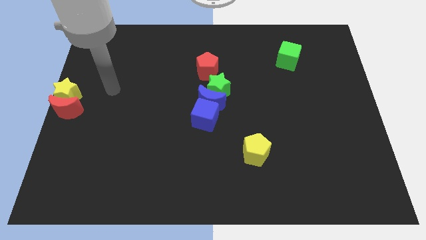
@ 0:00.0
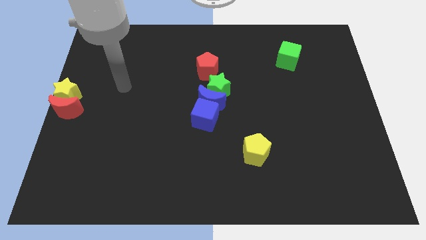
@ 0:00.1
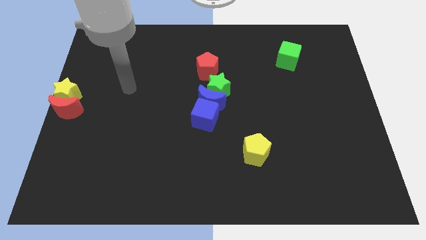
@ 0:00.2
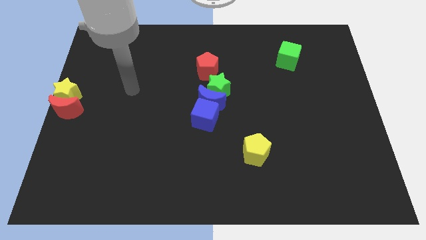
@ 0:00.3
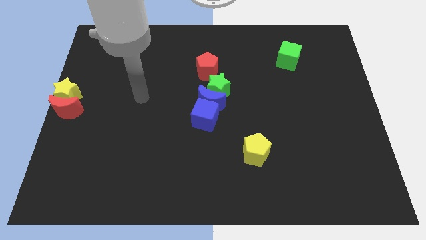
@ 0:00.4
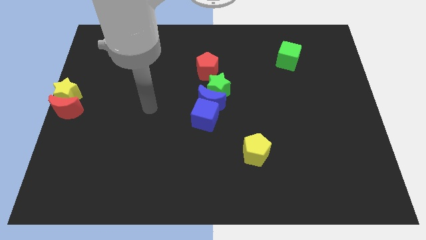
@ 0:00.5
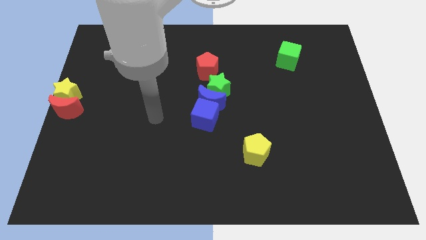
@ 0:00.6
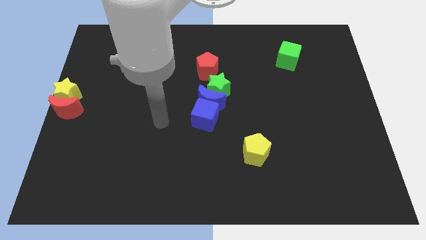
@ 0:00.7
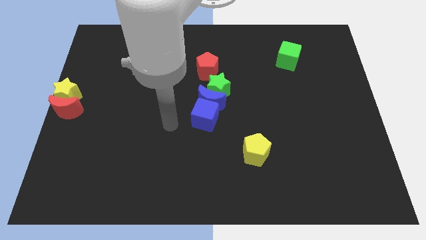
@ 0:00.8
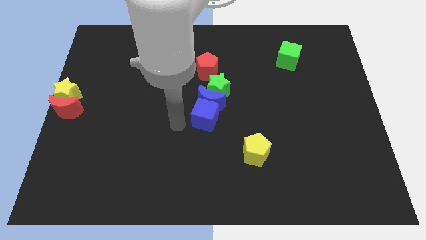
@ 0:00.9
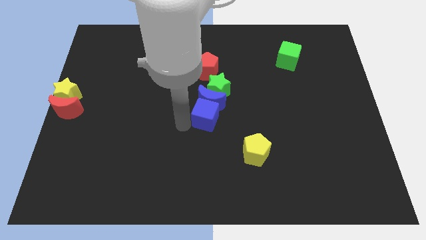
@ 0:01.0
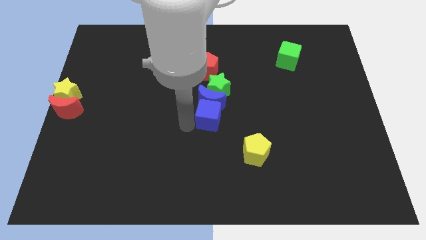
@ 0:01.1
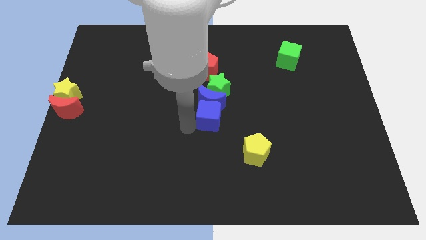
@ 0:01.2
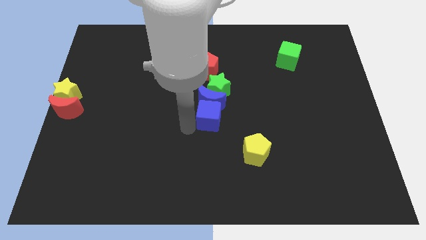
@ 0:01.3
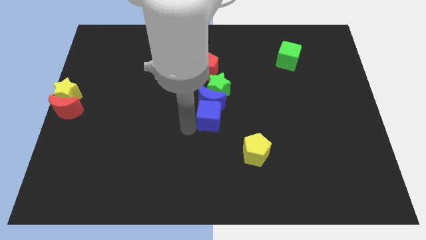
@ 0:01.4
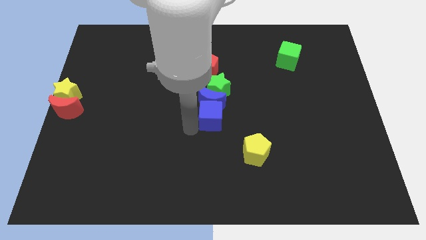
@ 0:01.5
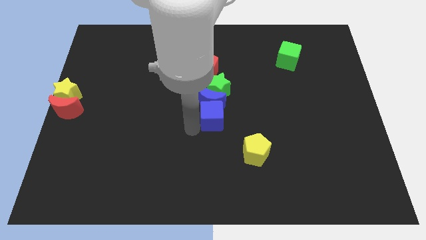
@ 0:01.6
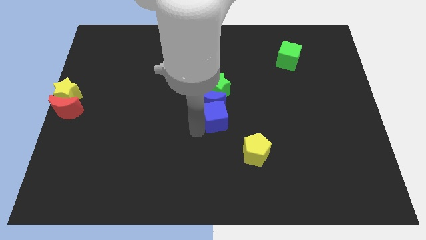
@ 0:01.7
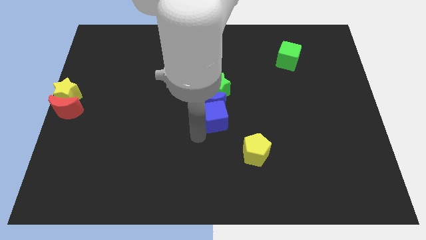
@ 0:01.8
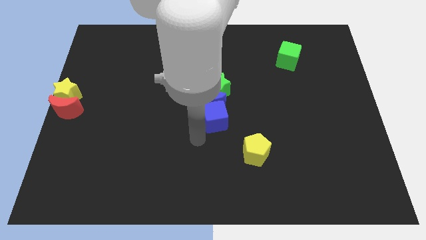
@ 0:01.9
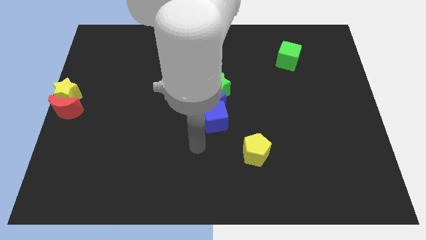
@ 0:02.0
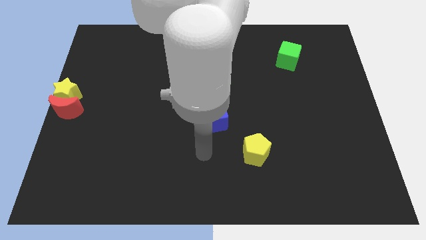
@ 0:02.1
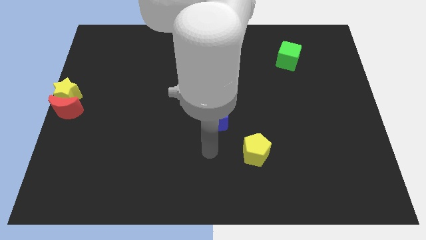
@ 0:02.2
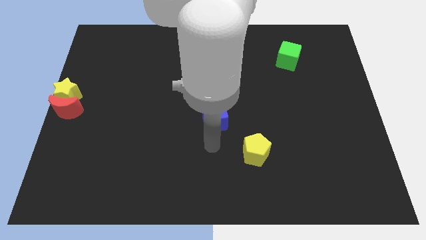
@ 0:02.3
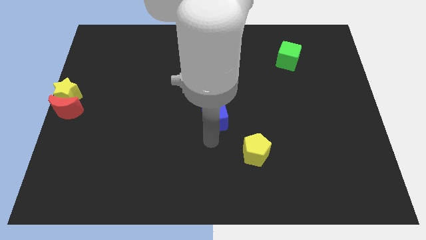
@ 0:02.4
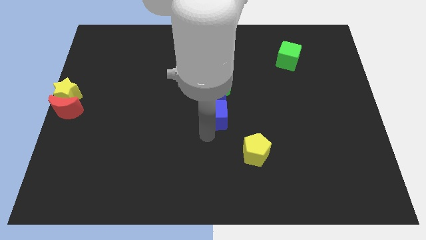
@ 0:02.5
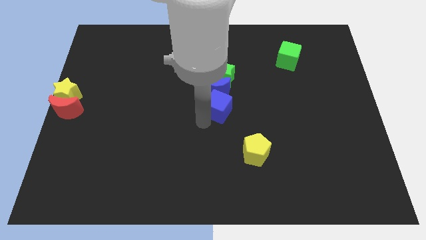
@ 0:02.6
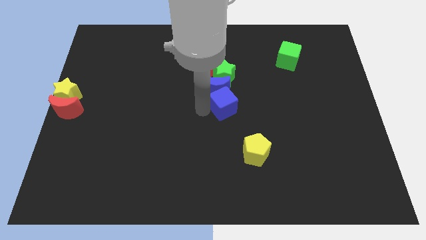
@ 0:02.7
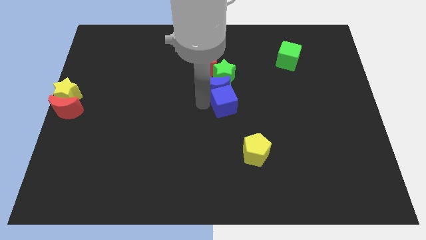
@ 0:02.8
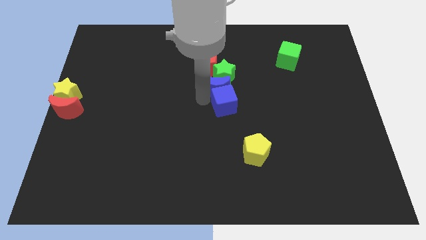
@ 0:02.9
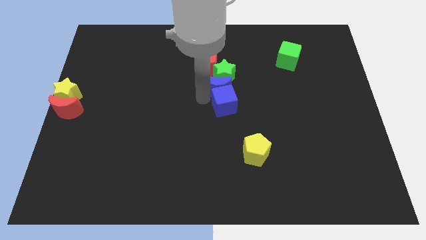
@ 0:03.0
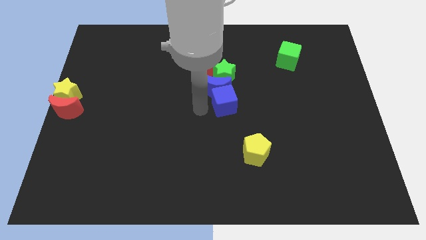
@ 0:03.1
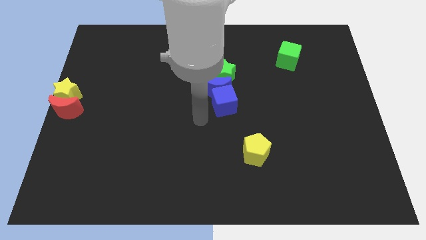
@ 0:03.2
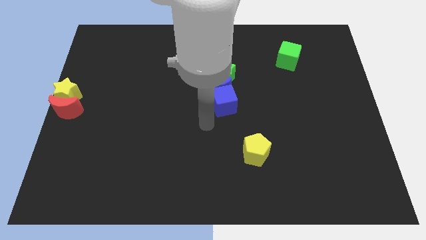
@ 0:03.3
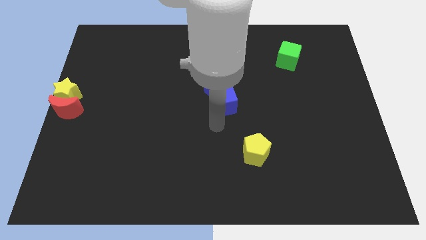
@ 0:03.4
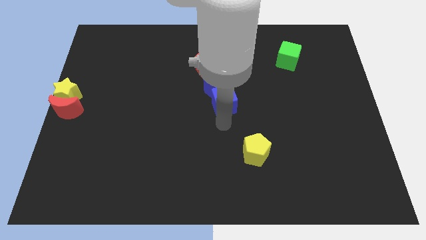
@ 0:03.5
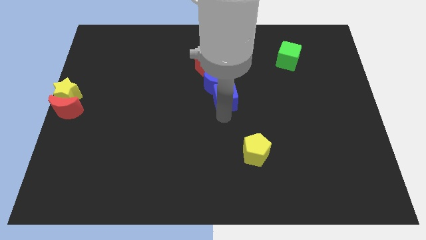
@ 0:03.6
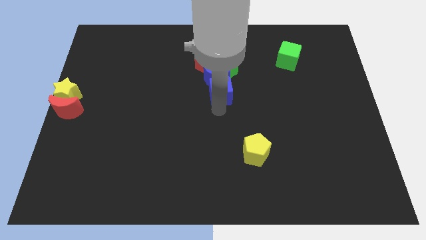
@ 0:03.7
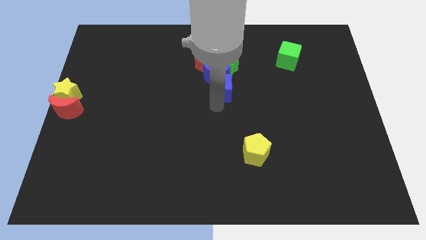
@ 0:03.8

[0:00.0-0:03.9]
push the blue cube into the blue crescent

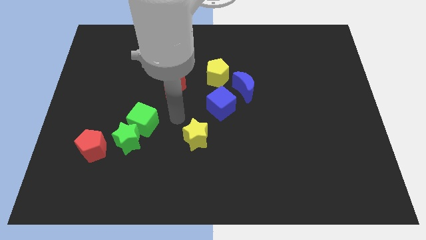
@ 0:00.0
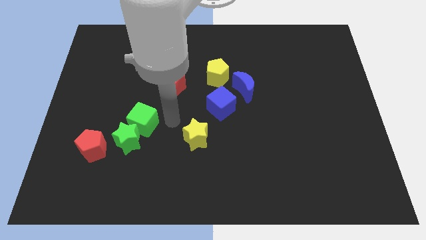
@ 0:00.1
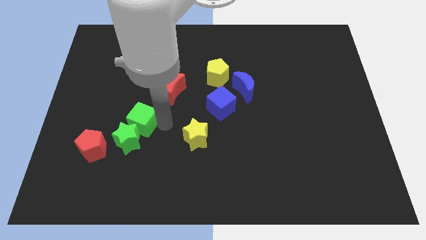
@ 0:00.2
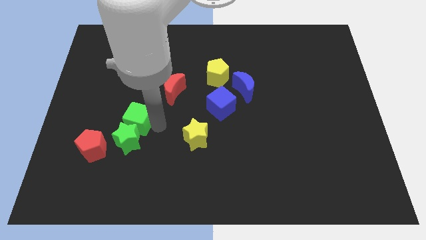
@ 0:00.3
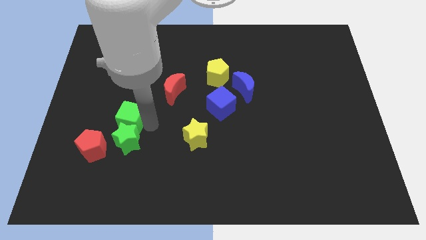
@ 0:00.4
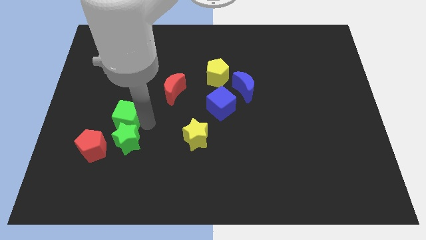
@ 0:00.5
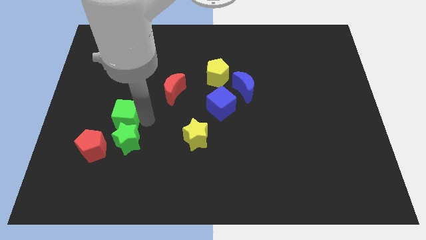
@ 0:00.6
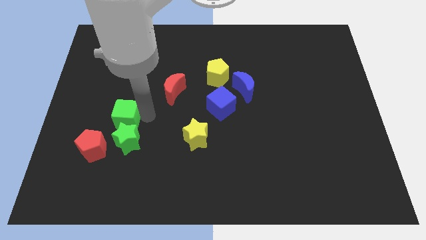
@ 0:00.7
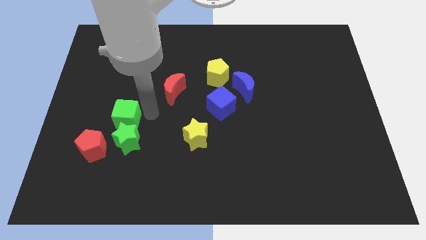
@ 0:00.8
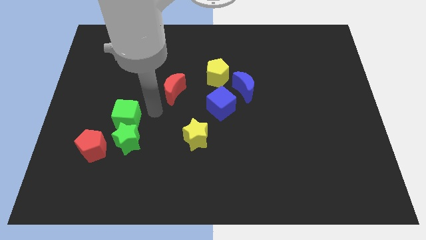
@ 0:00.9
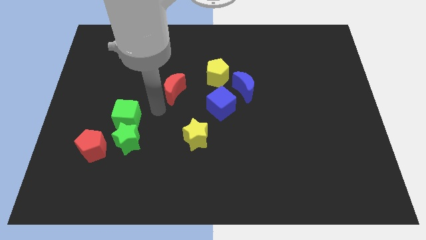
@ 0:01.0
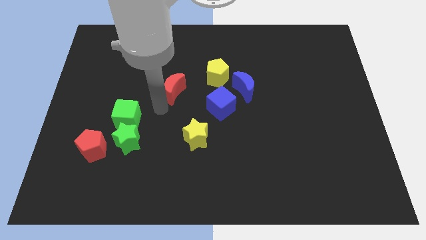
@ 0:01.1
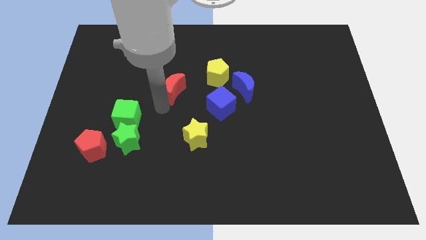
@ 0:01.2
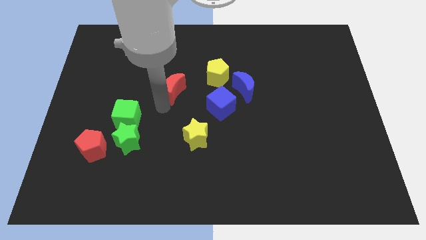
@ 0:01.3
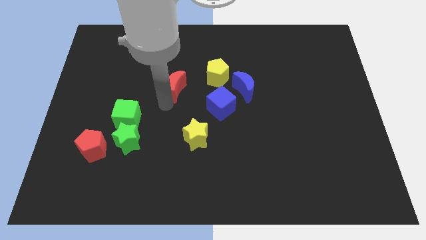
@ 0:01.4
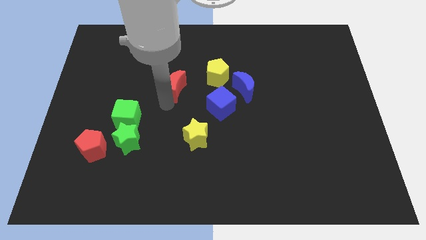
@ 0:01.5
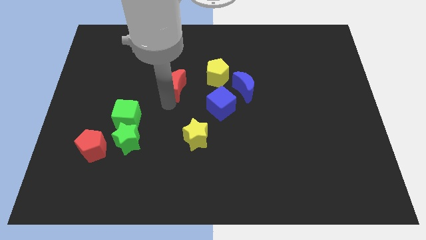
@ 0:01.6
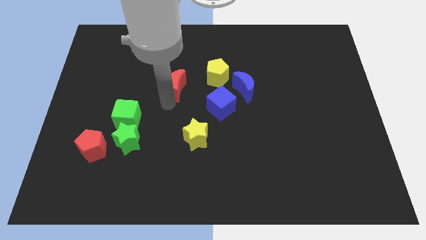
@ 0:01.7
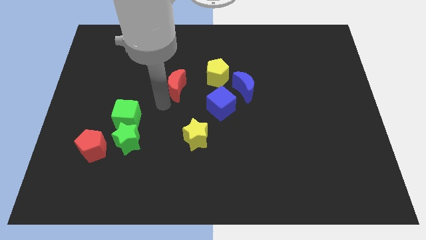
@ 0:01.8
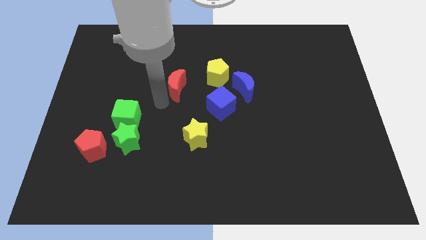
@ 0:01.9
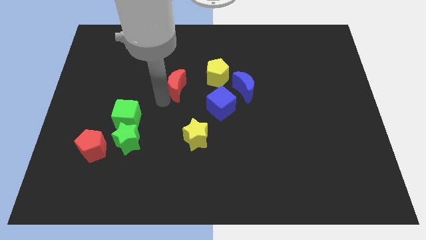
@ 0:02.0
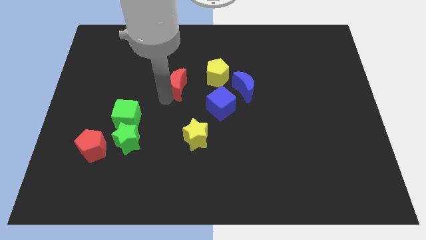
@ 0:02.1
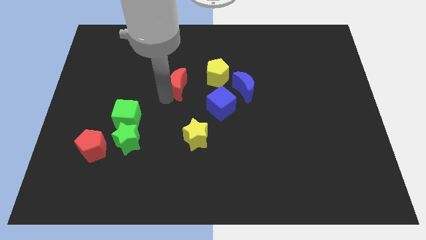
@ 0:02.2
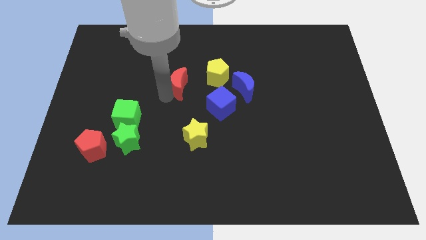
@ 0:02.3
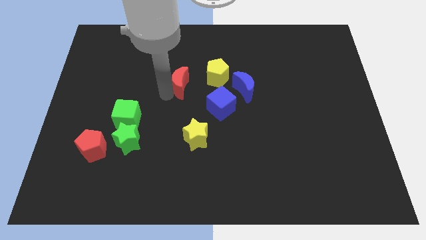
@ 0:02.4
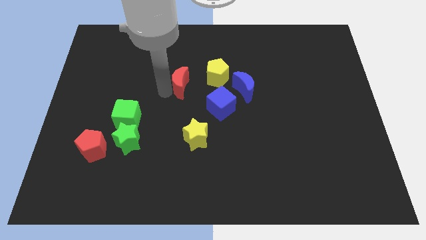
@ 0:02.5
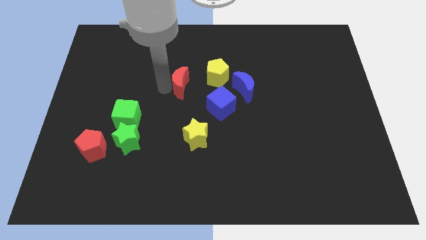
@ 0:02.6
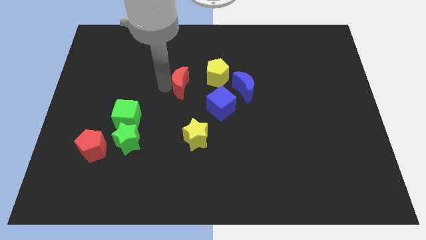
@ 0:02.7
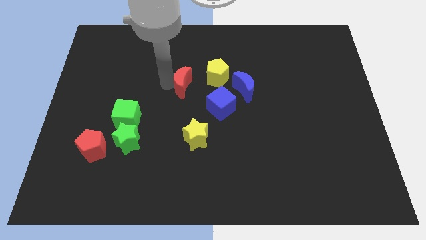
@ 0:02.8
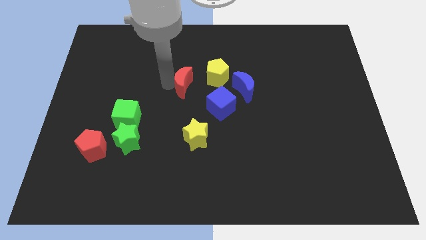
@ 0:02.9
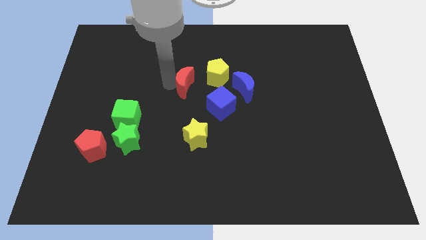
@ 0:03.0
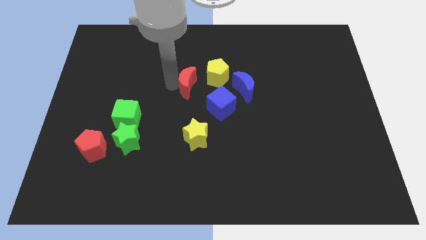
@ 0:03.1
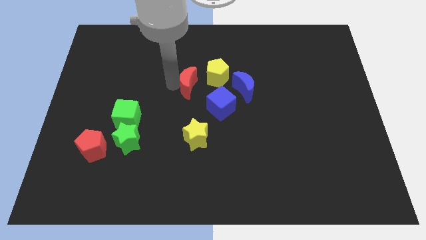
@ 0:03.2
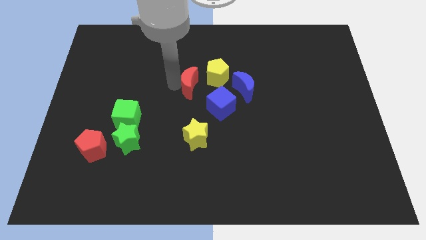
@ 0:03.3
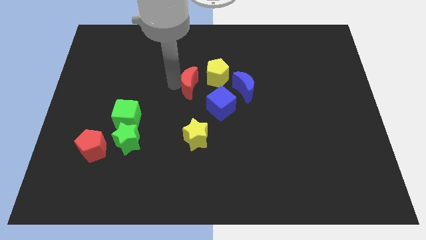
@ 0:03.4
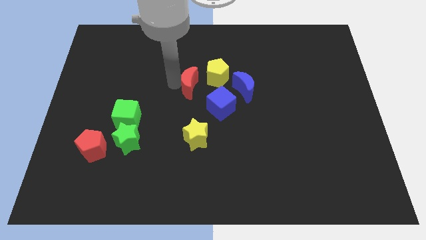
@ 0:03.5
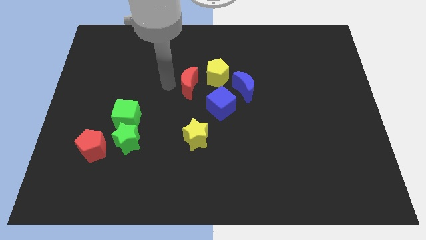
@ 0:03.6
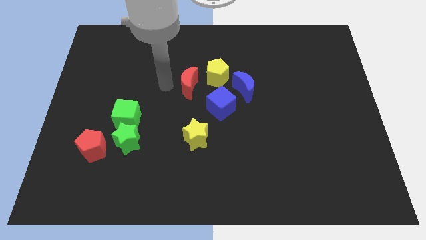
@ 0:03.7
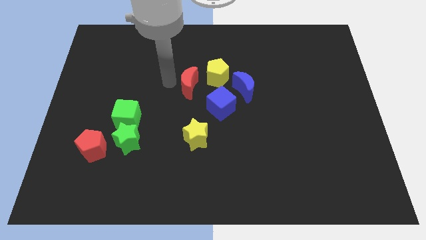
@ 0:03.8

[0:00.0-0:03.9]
place the green cube above the green star while placing the red crescent left to the yellow pentagon

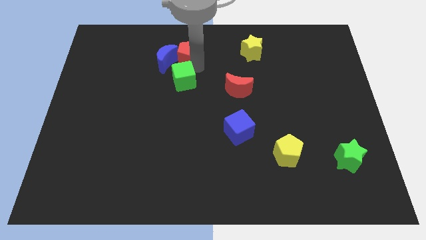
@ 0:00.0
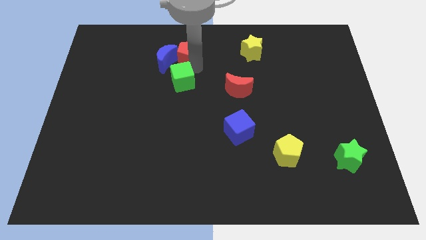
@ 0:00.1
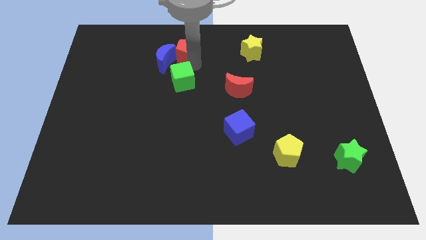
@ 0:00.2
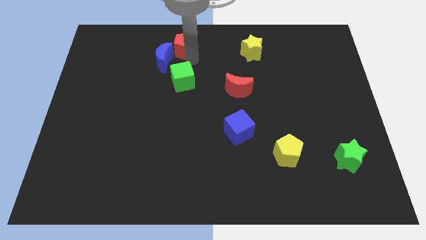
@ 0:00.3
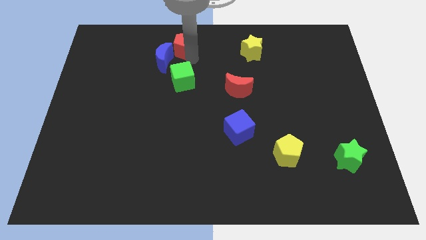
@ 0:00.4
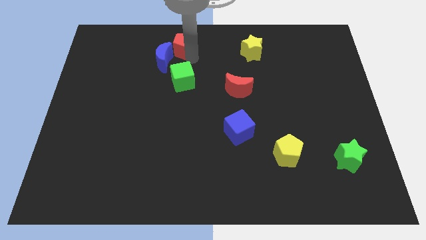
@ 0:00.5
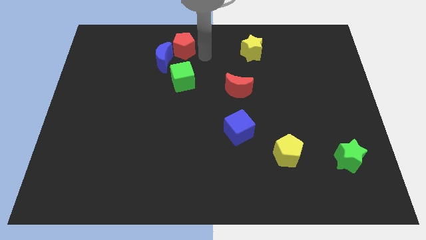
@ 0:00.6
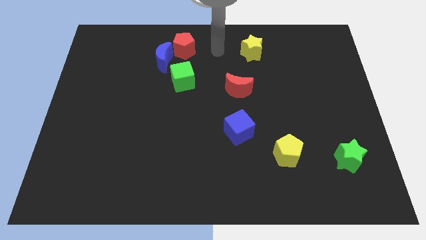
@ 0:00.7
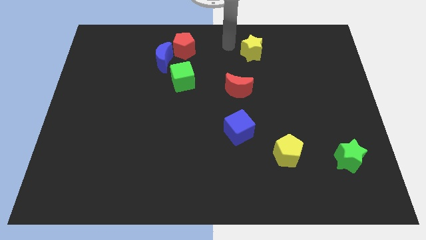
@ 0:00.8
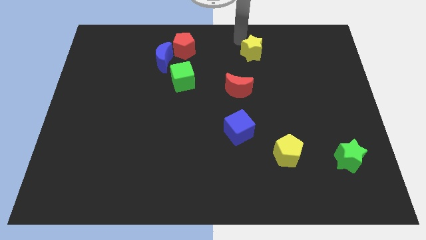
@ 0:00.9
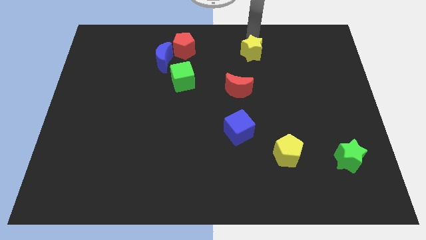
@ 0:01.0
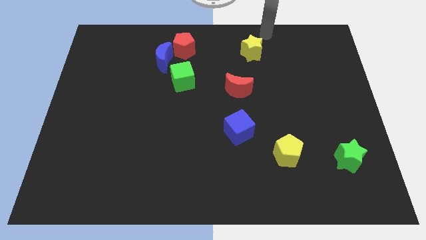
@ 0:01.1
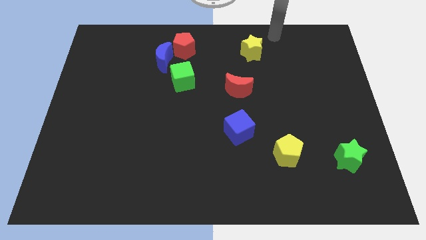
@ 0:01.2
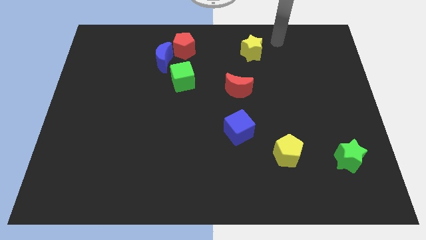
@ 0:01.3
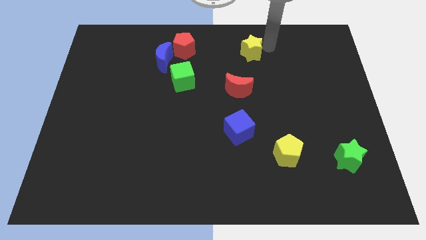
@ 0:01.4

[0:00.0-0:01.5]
separate red pentagon and the green cube
